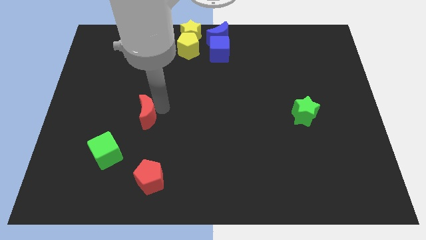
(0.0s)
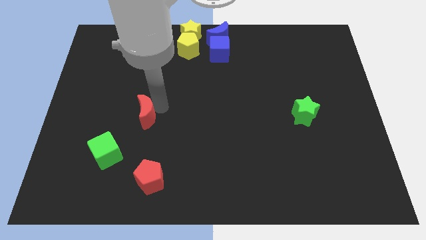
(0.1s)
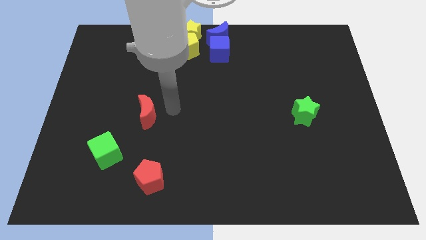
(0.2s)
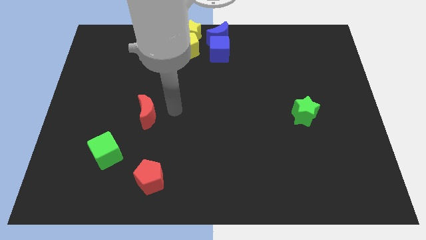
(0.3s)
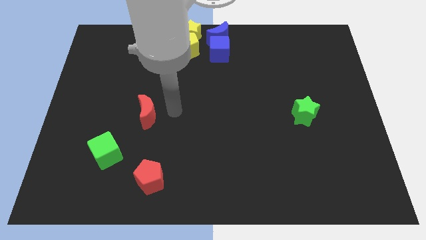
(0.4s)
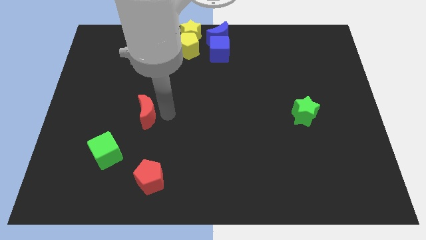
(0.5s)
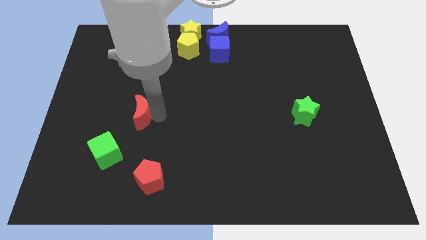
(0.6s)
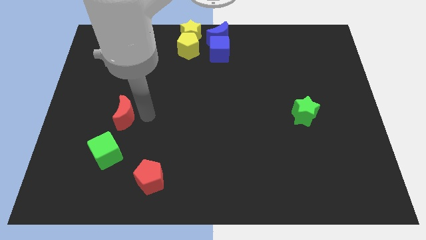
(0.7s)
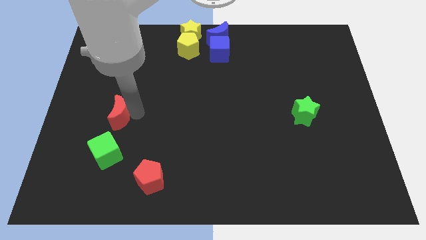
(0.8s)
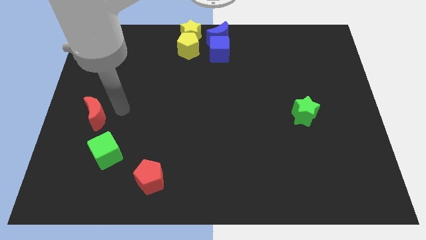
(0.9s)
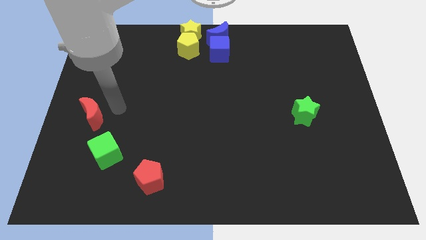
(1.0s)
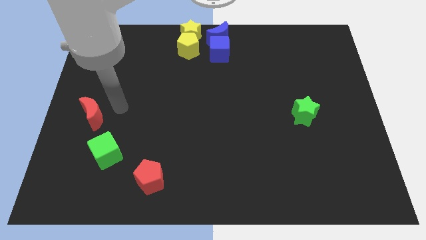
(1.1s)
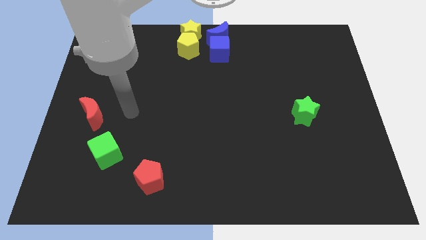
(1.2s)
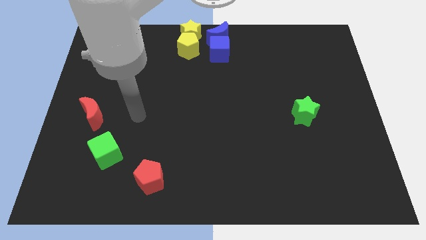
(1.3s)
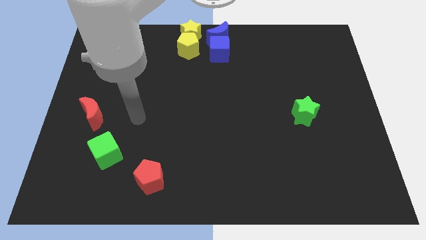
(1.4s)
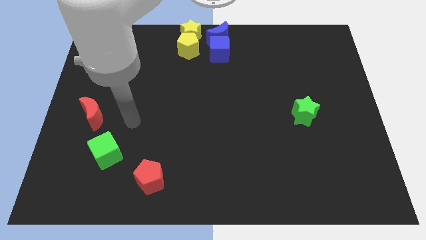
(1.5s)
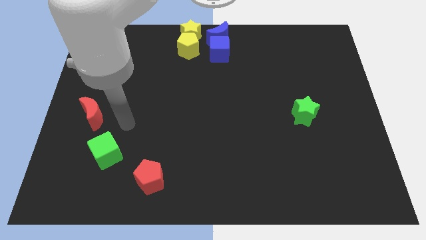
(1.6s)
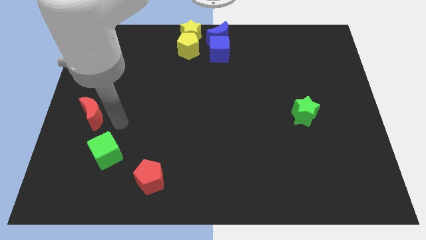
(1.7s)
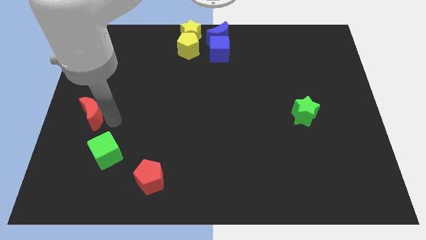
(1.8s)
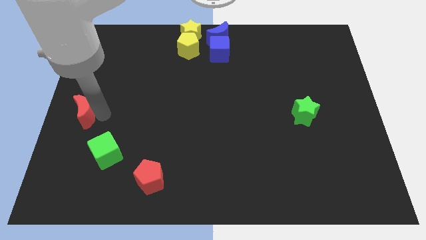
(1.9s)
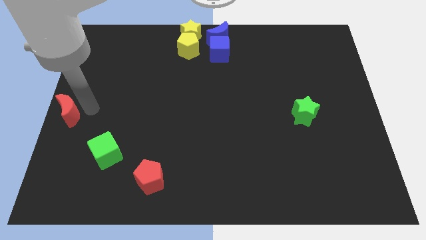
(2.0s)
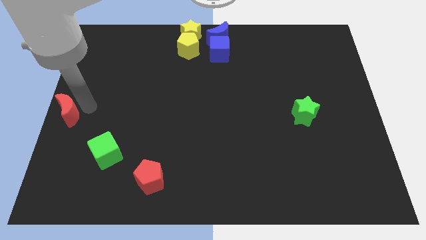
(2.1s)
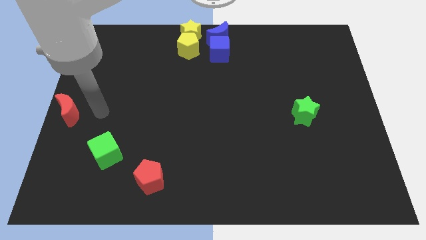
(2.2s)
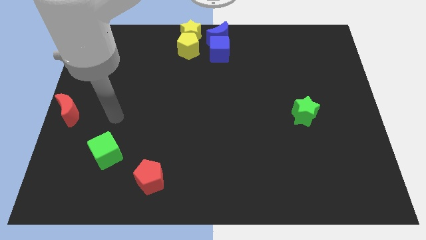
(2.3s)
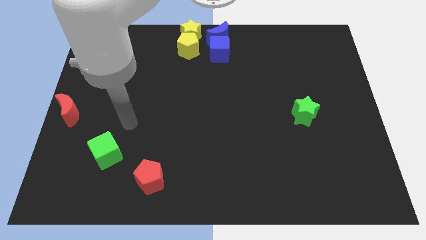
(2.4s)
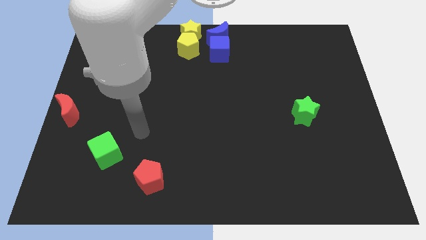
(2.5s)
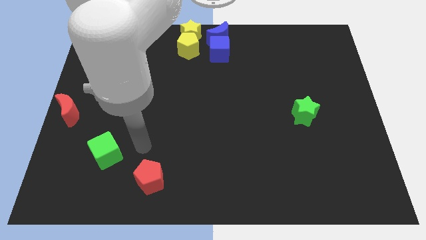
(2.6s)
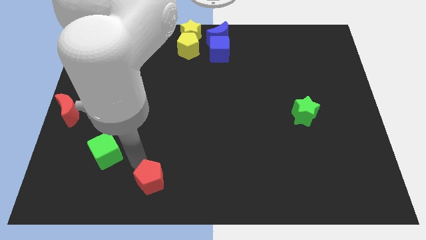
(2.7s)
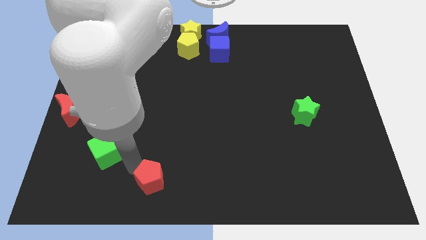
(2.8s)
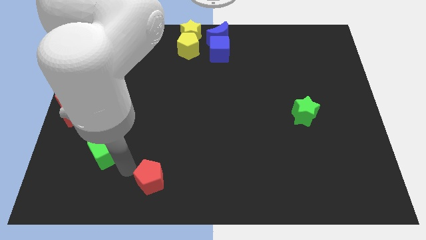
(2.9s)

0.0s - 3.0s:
place red moon on the left side of the board

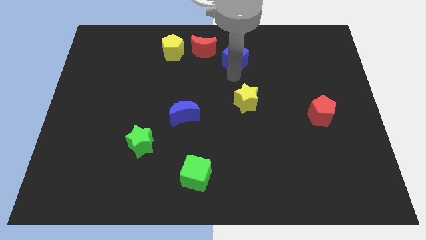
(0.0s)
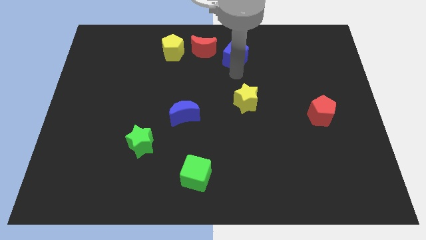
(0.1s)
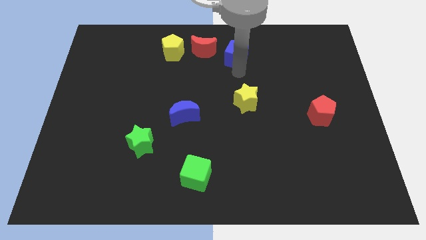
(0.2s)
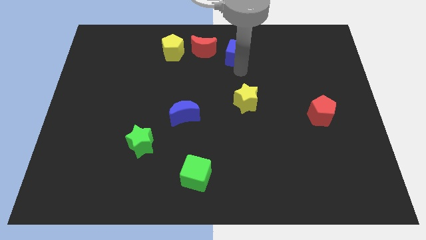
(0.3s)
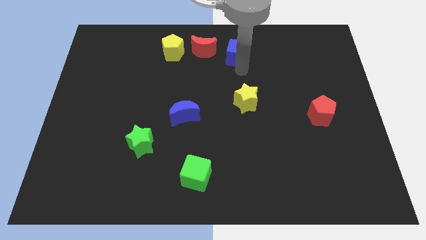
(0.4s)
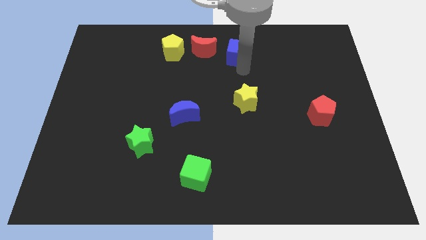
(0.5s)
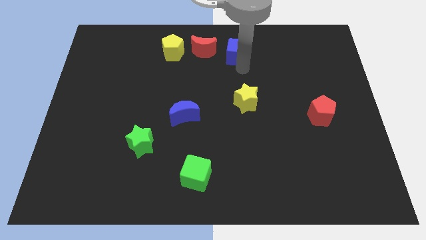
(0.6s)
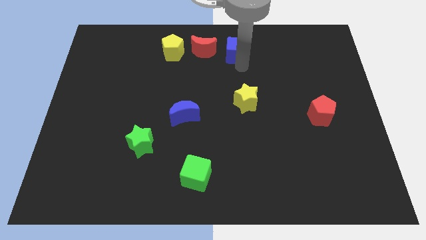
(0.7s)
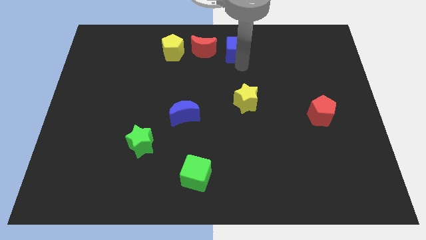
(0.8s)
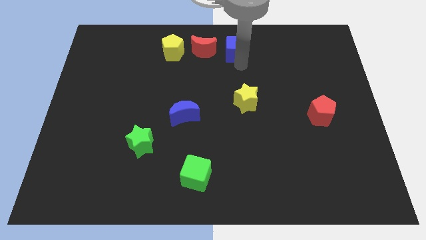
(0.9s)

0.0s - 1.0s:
move the blue cube up slightly

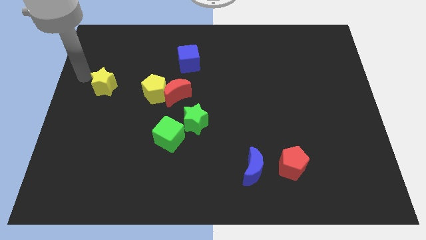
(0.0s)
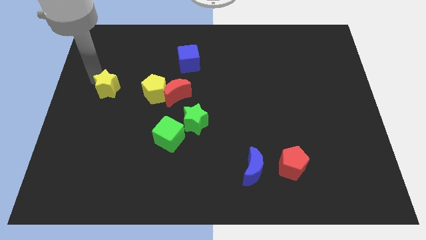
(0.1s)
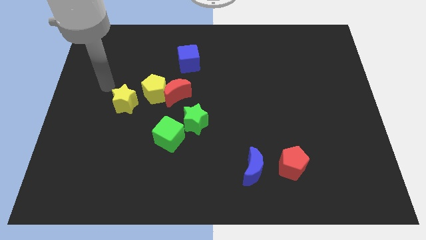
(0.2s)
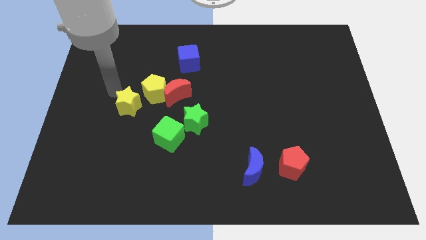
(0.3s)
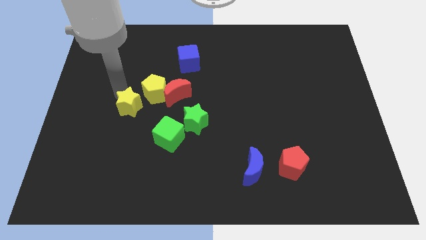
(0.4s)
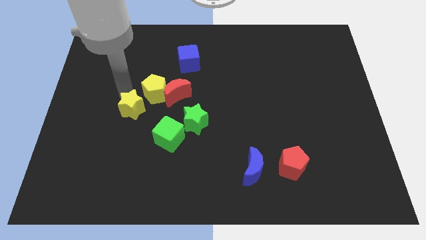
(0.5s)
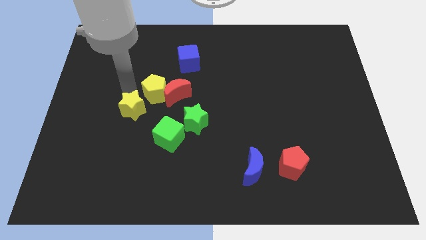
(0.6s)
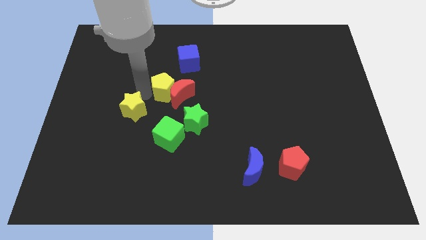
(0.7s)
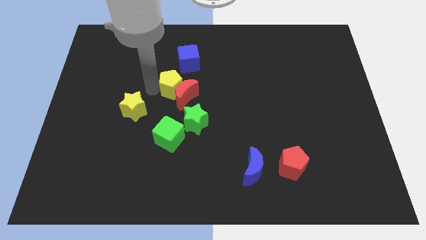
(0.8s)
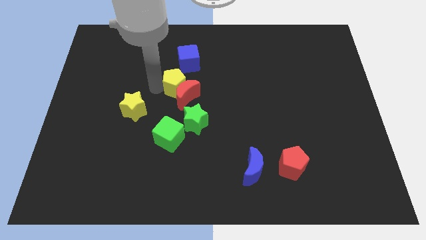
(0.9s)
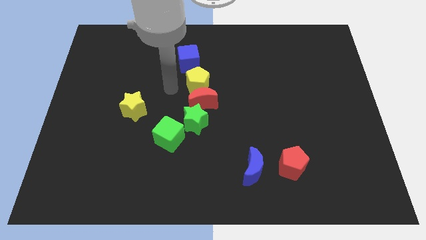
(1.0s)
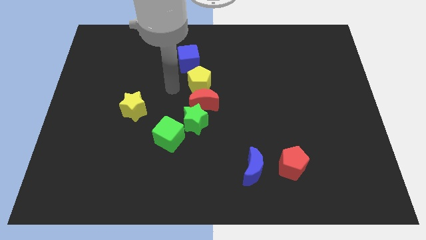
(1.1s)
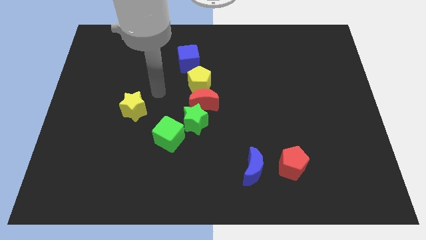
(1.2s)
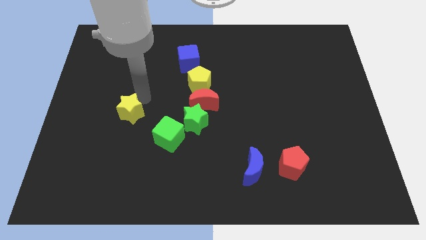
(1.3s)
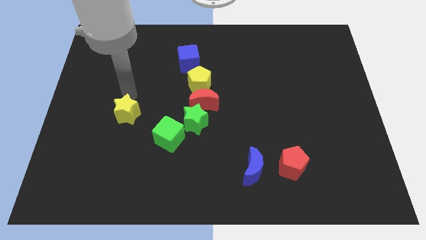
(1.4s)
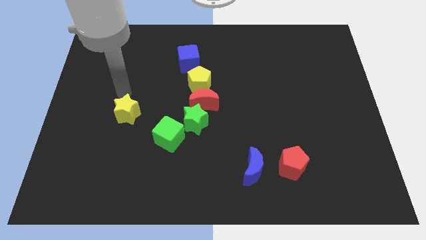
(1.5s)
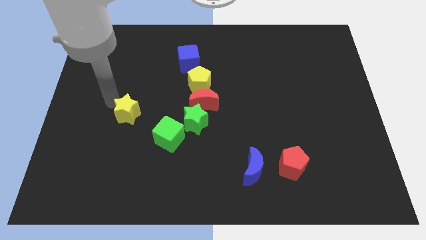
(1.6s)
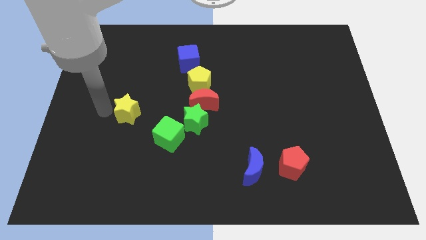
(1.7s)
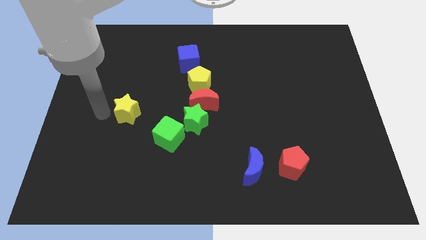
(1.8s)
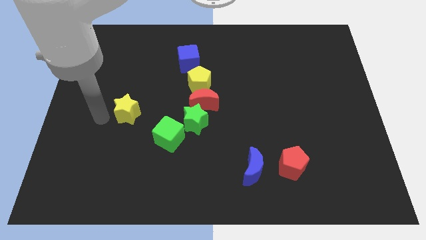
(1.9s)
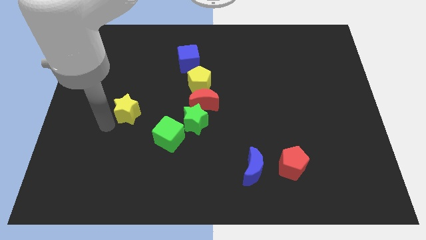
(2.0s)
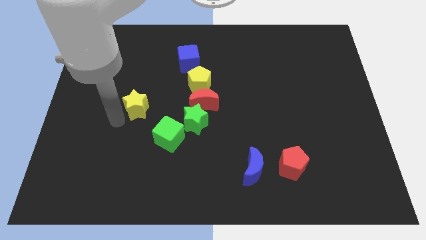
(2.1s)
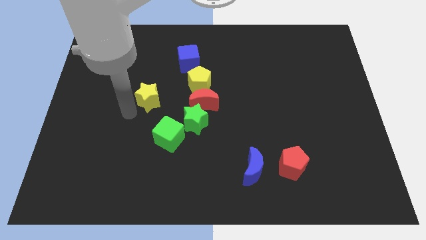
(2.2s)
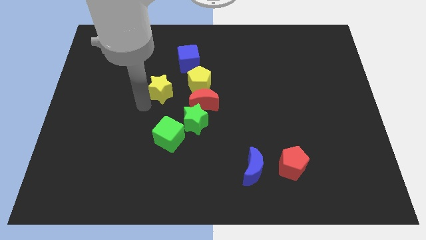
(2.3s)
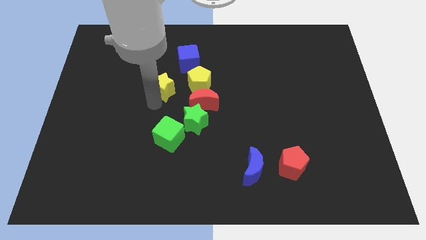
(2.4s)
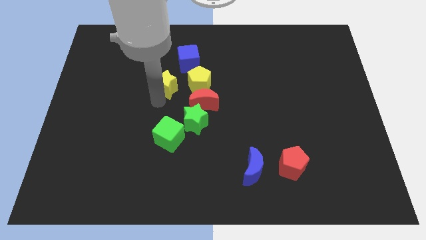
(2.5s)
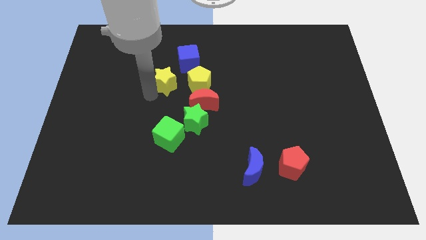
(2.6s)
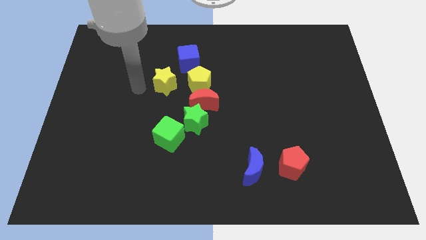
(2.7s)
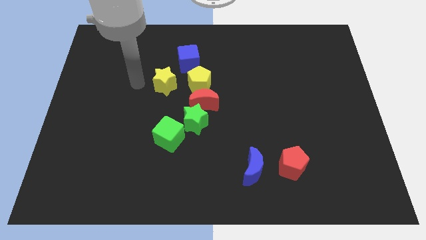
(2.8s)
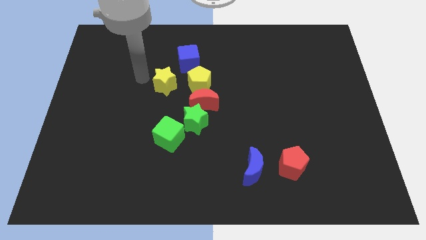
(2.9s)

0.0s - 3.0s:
push the yellow pentagon red crescent and yellow star to the bottom side of the blue cube

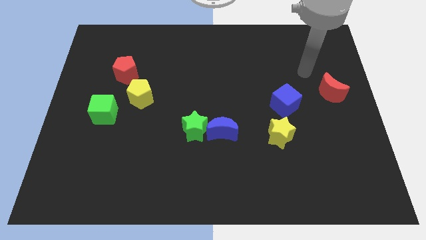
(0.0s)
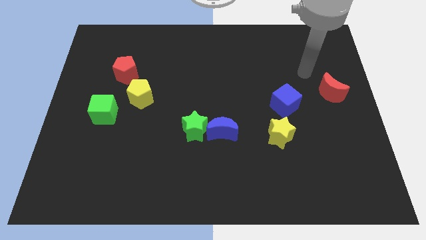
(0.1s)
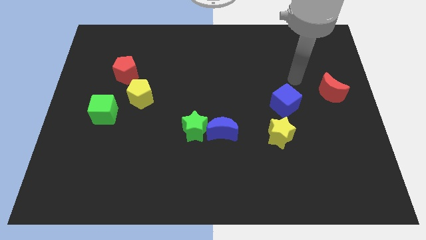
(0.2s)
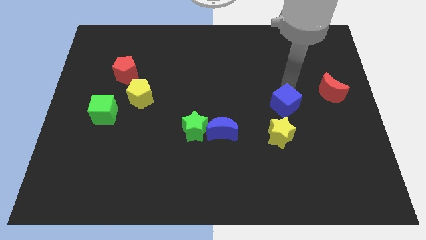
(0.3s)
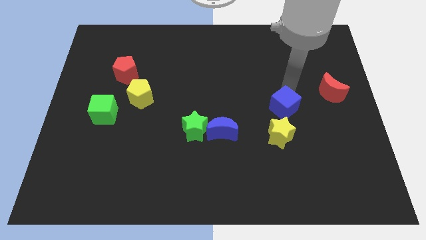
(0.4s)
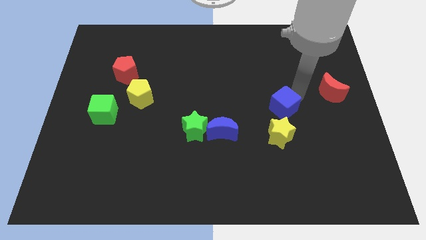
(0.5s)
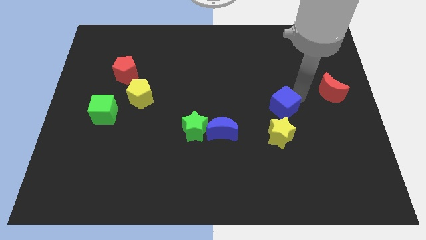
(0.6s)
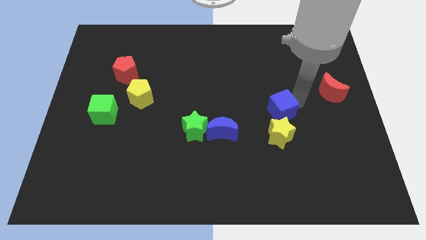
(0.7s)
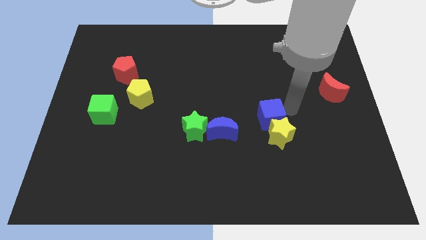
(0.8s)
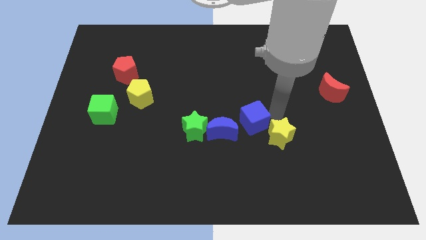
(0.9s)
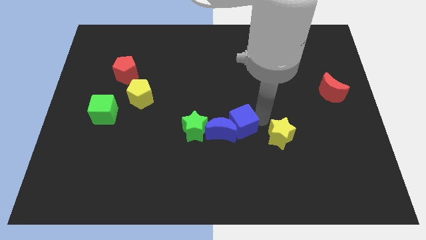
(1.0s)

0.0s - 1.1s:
slide blue cube into blue moon

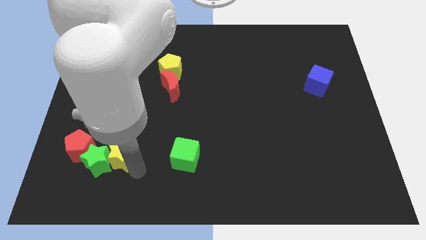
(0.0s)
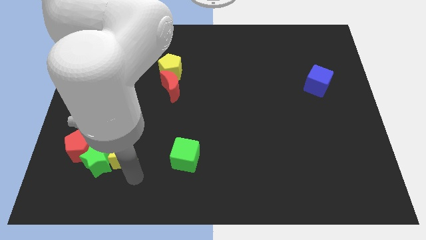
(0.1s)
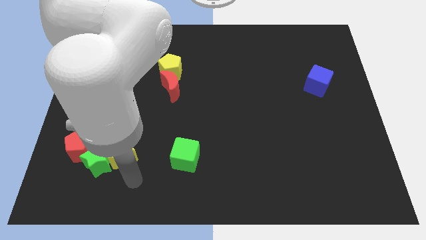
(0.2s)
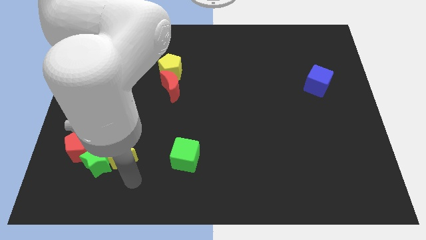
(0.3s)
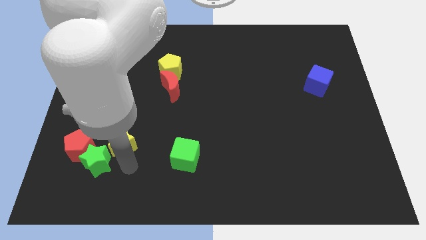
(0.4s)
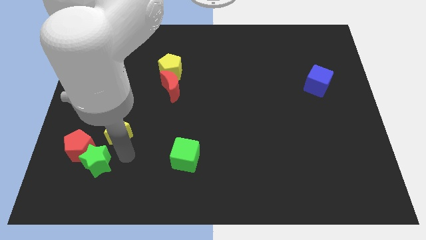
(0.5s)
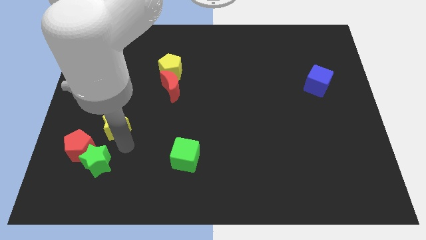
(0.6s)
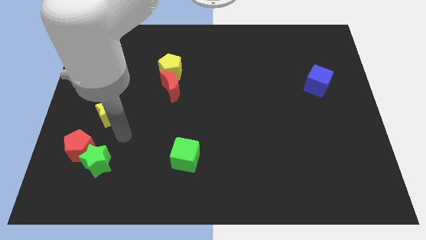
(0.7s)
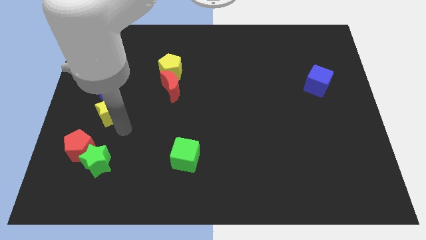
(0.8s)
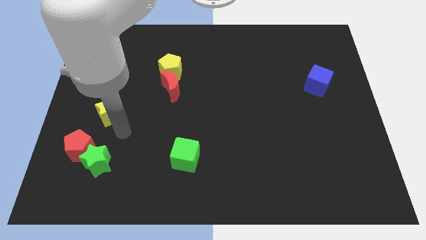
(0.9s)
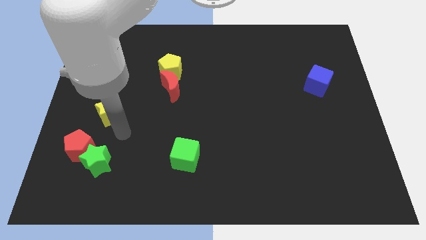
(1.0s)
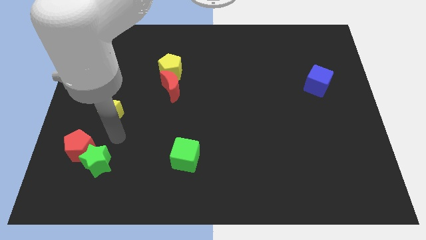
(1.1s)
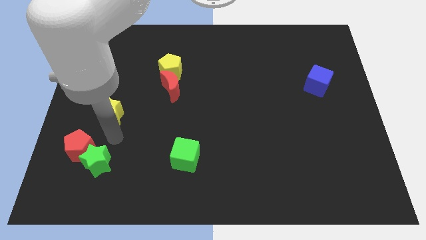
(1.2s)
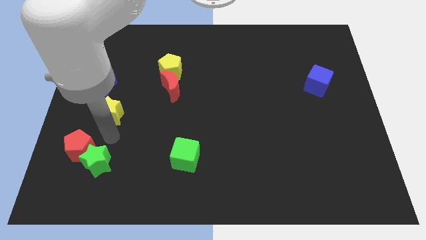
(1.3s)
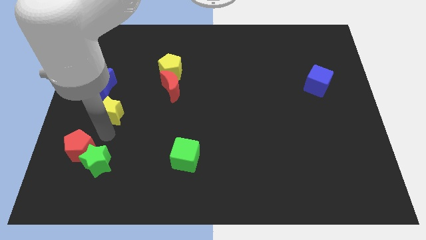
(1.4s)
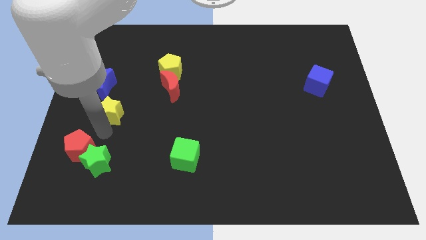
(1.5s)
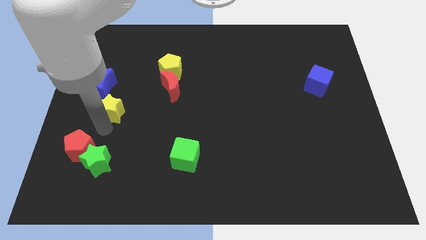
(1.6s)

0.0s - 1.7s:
place yellow star to the bottom of blue moon
